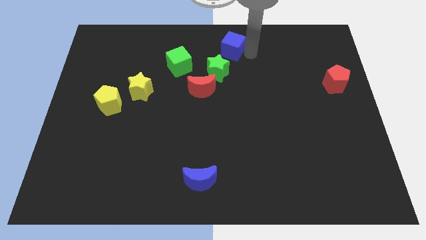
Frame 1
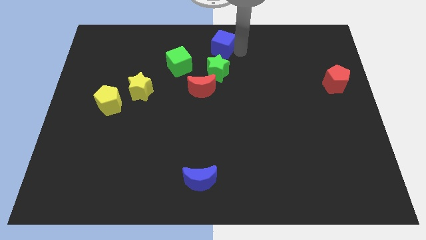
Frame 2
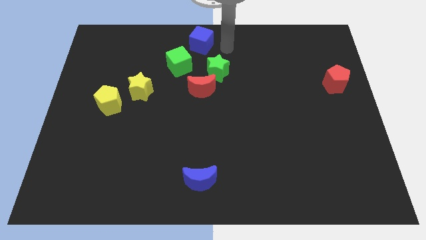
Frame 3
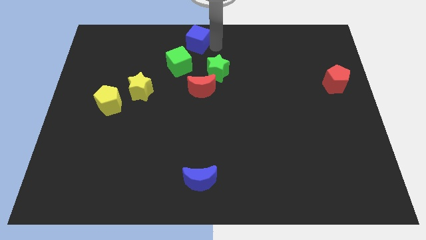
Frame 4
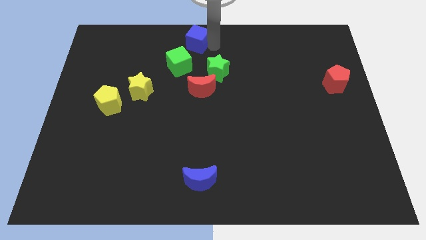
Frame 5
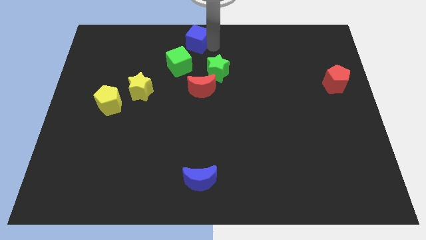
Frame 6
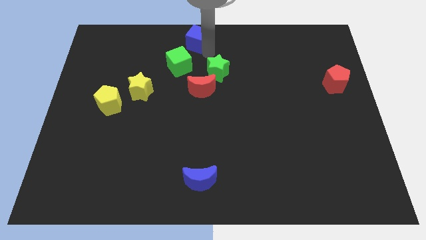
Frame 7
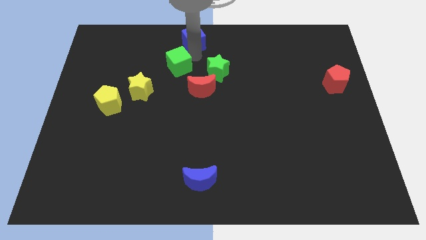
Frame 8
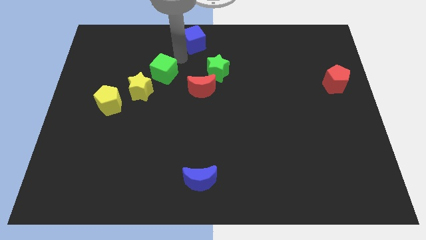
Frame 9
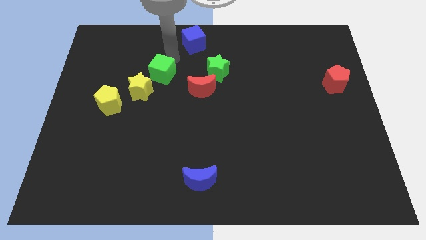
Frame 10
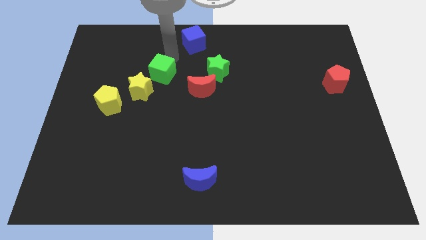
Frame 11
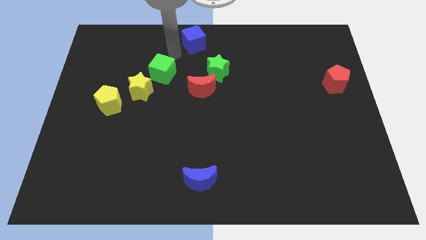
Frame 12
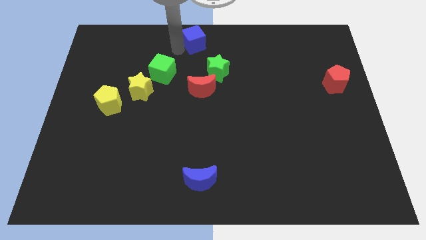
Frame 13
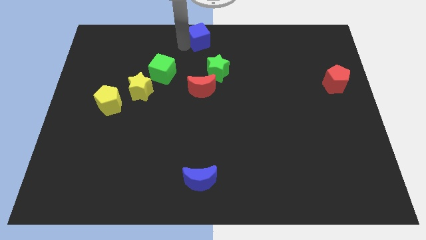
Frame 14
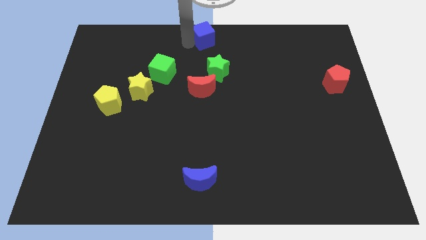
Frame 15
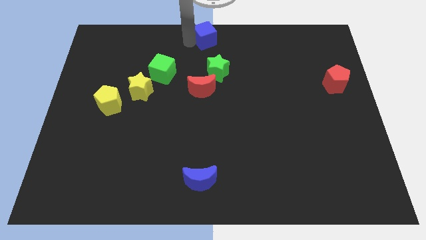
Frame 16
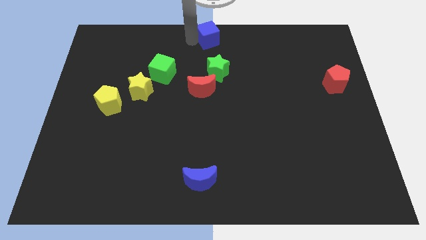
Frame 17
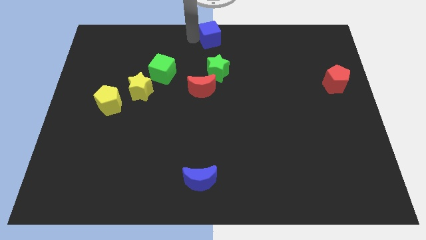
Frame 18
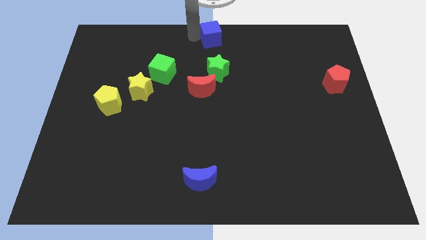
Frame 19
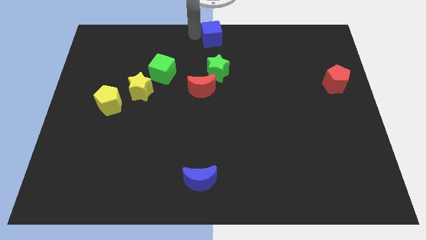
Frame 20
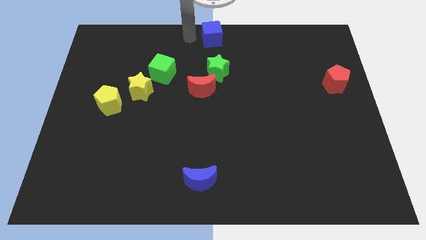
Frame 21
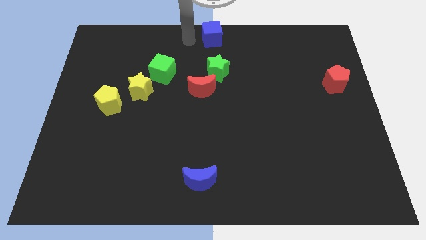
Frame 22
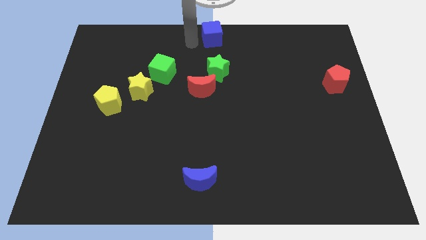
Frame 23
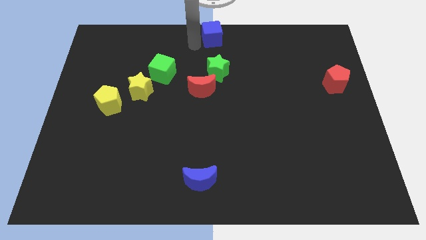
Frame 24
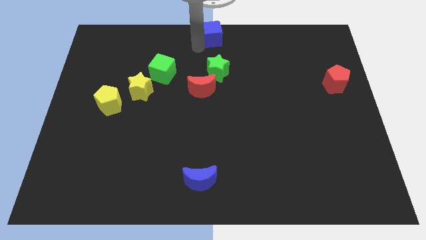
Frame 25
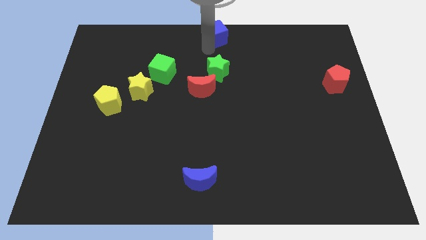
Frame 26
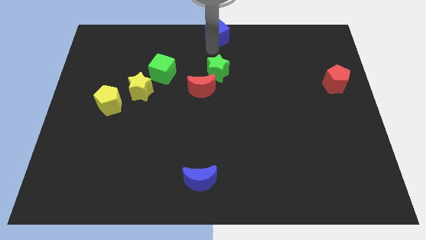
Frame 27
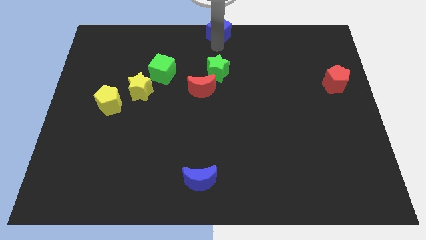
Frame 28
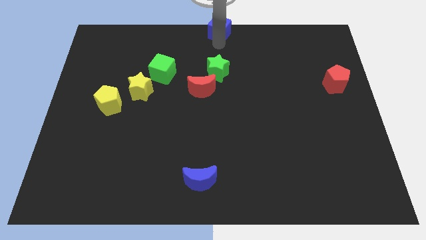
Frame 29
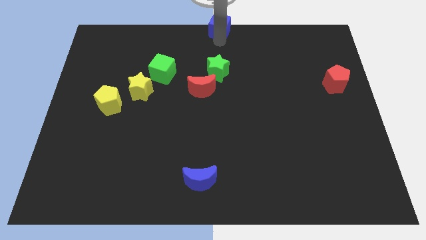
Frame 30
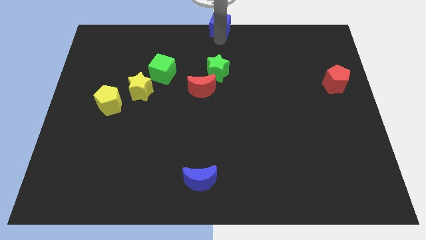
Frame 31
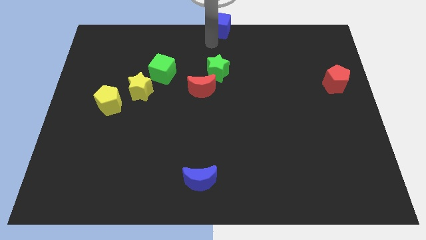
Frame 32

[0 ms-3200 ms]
put the blue cube and the green cube diagonal to each other

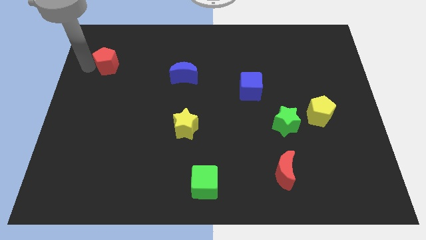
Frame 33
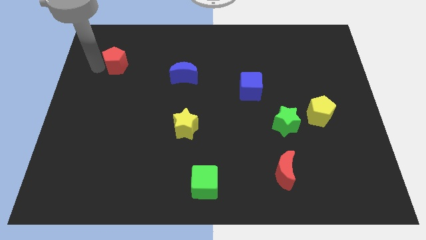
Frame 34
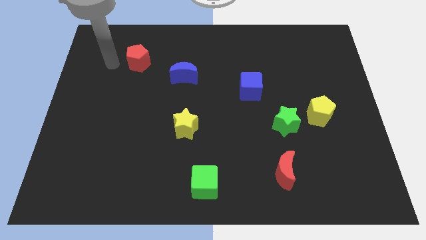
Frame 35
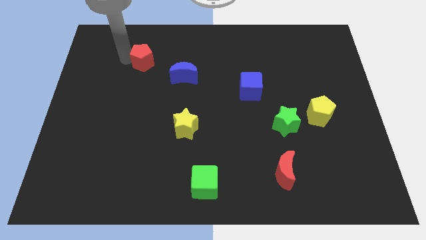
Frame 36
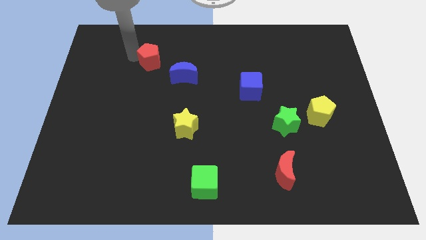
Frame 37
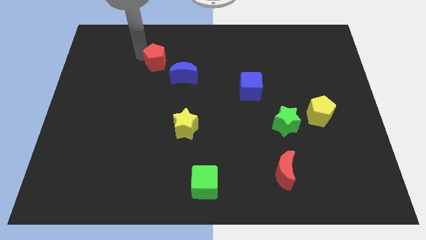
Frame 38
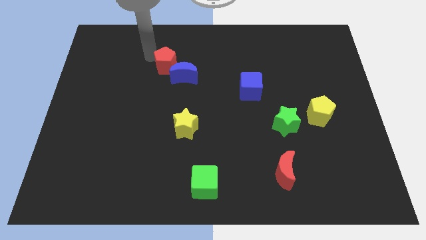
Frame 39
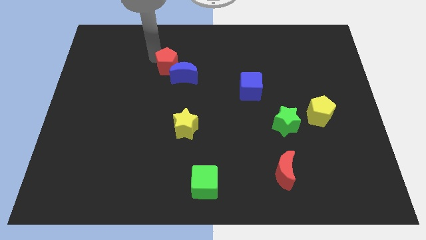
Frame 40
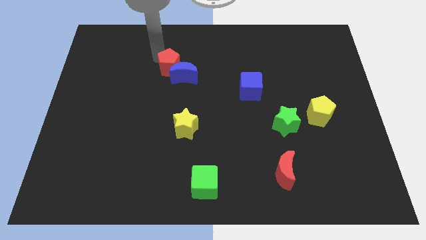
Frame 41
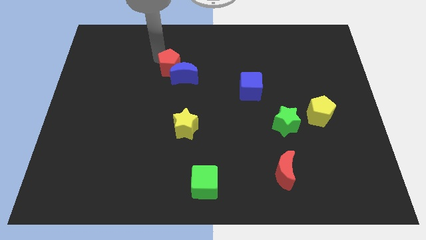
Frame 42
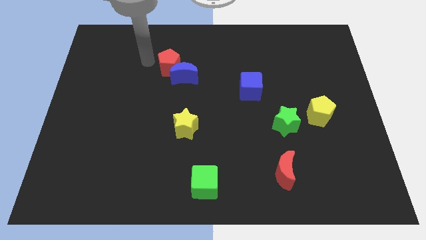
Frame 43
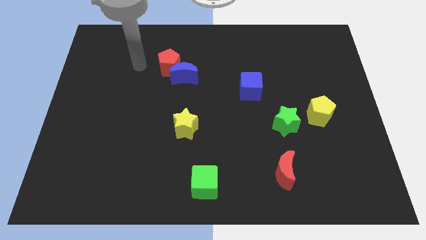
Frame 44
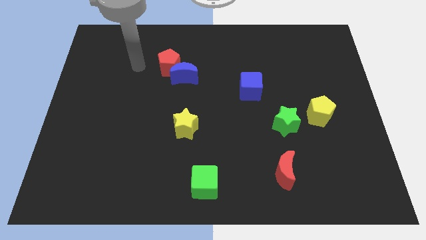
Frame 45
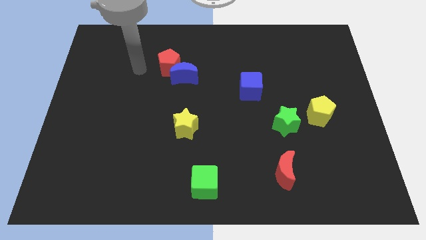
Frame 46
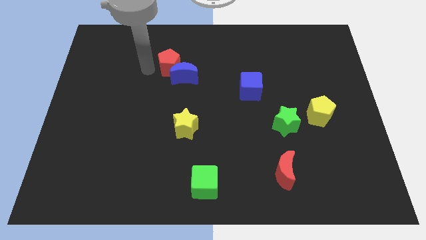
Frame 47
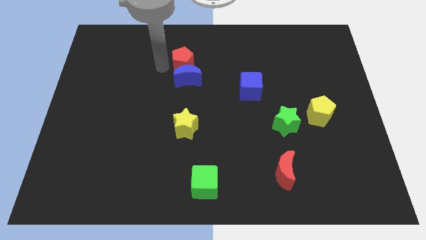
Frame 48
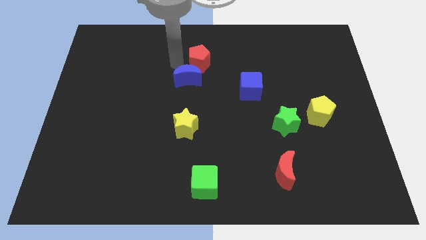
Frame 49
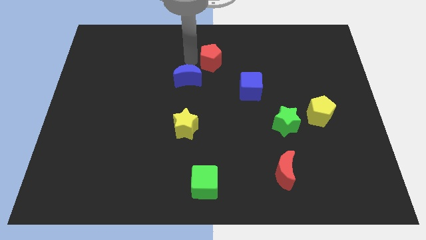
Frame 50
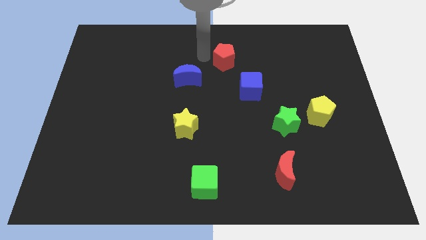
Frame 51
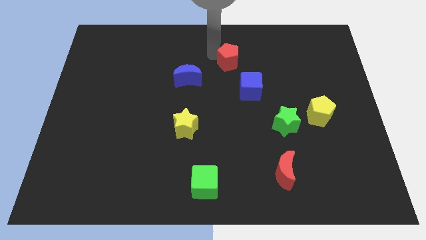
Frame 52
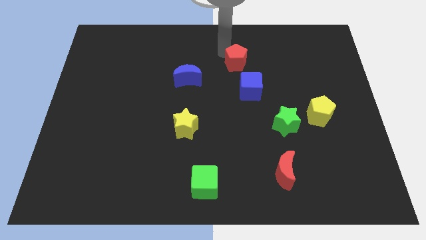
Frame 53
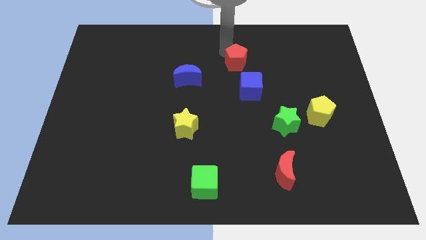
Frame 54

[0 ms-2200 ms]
move the red pentagon close to blue moon

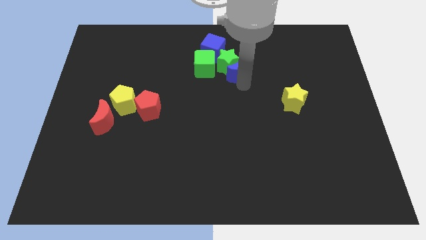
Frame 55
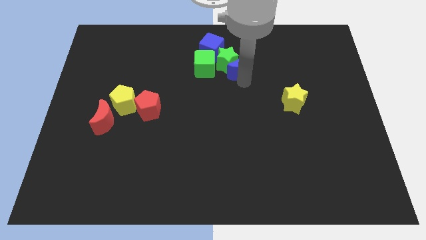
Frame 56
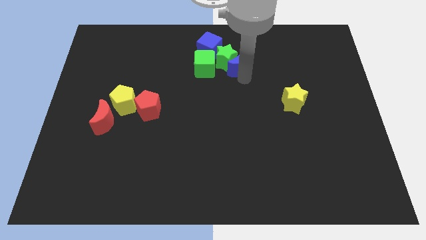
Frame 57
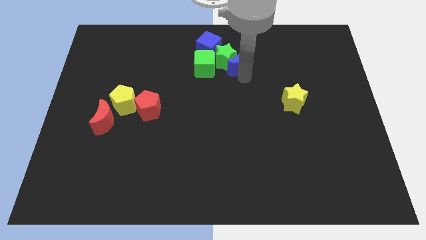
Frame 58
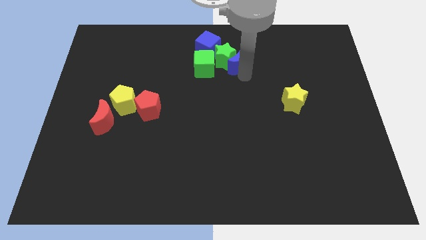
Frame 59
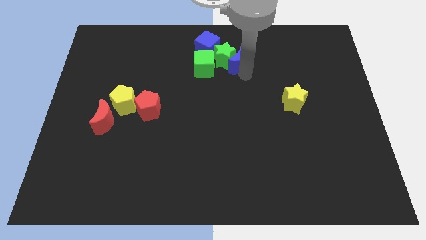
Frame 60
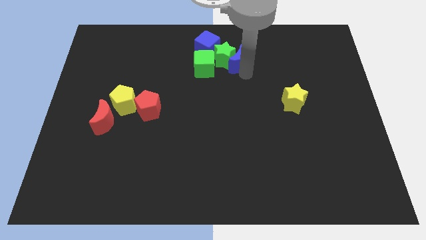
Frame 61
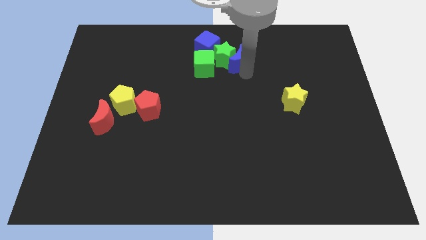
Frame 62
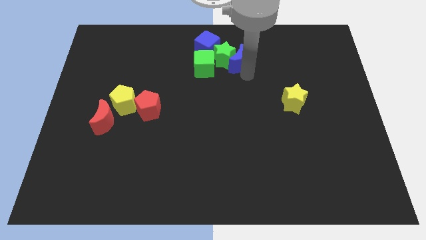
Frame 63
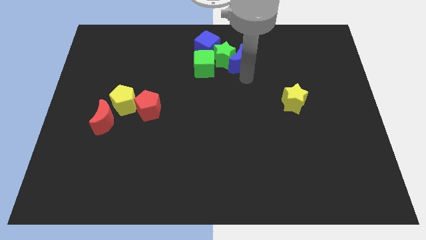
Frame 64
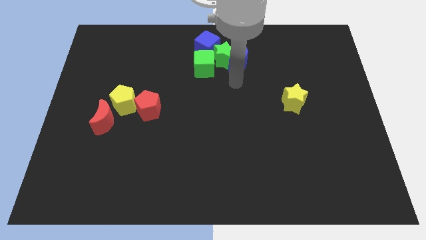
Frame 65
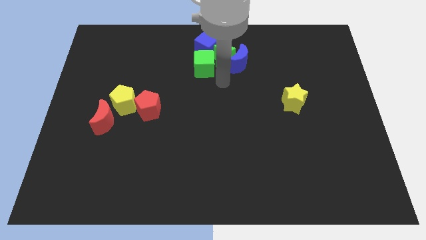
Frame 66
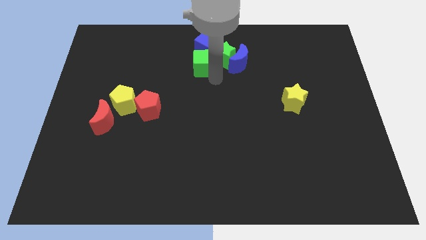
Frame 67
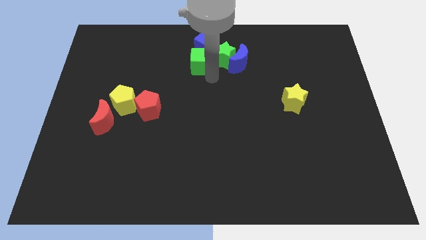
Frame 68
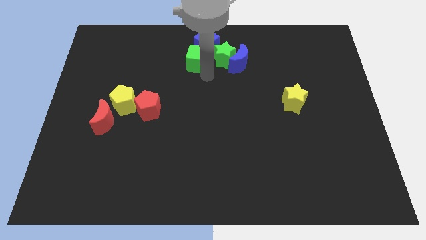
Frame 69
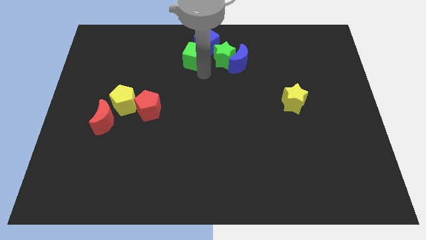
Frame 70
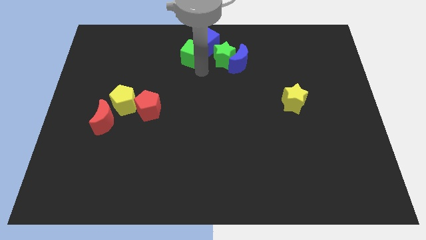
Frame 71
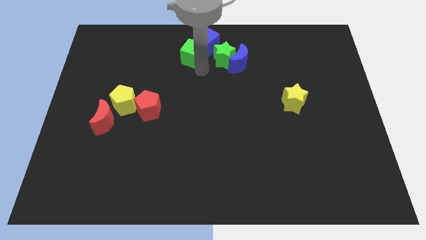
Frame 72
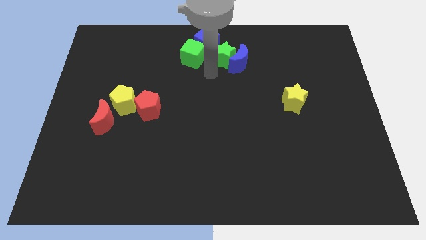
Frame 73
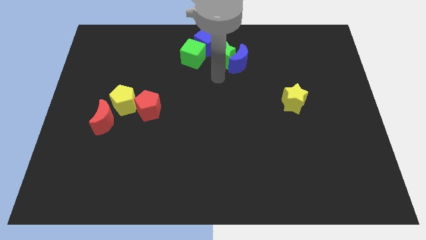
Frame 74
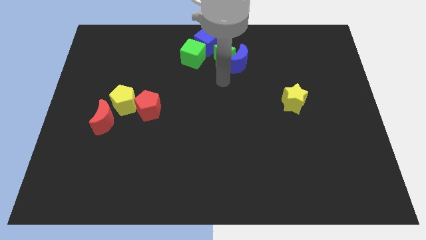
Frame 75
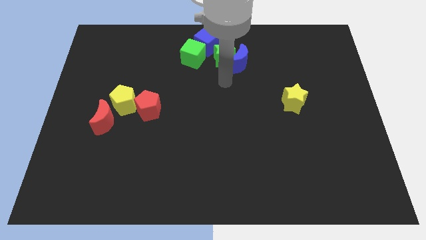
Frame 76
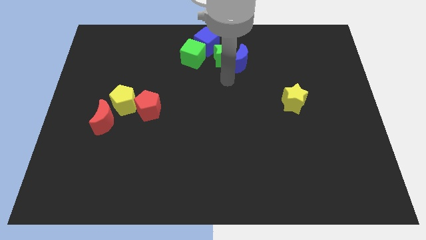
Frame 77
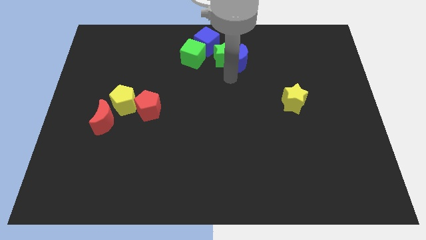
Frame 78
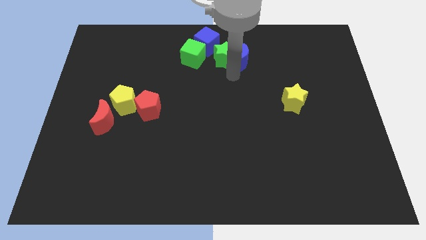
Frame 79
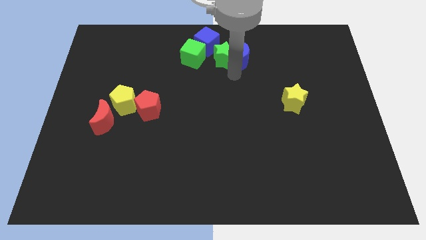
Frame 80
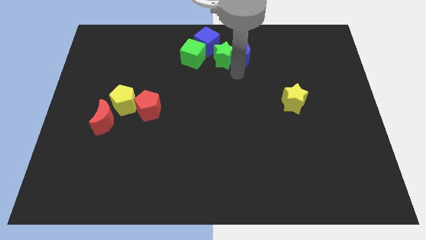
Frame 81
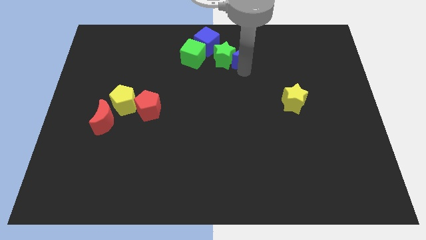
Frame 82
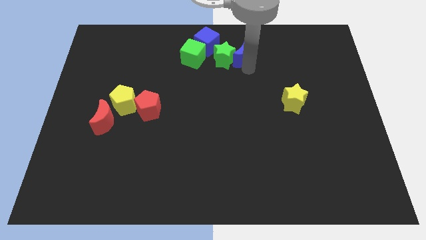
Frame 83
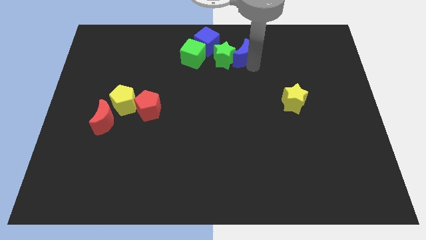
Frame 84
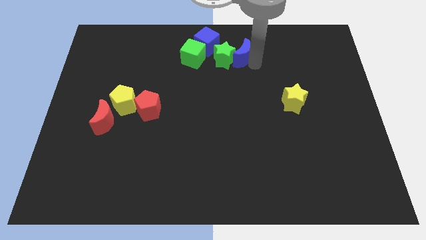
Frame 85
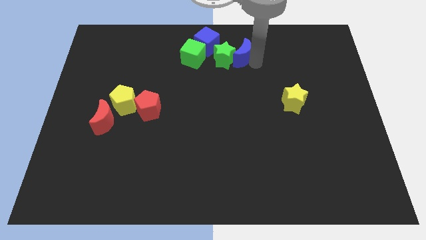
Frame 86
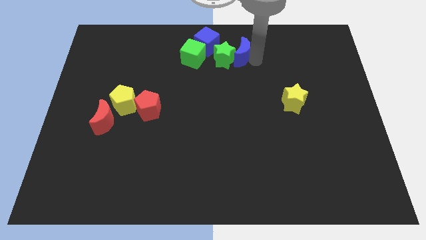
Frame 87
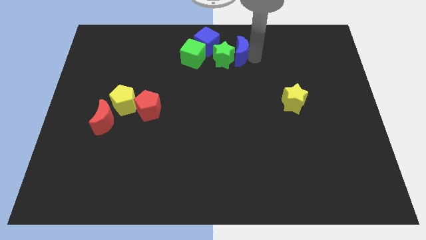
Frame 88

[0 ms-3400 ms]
push the blue crescent into the green star from the right

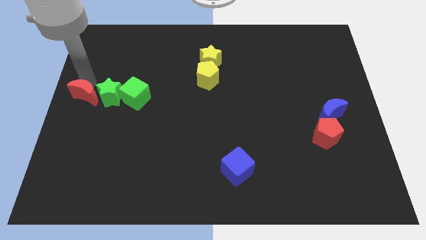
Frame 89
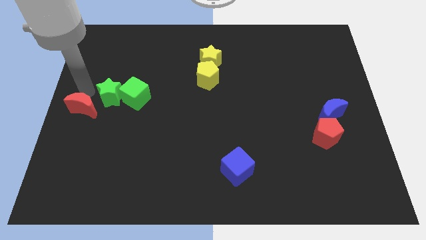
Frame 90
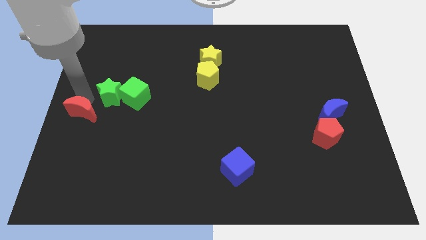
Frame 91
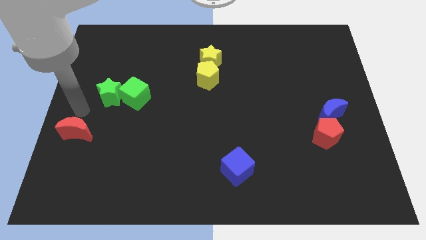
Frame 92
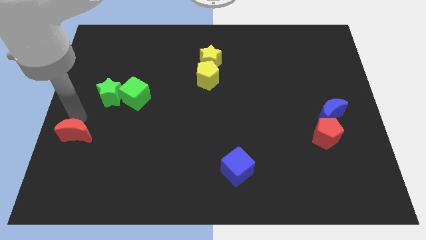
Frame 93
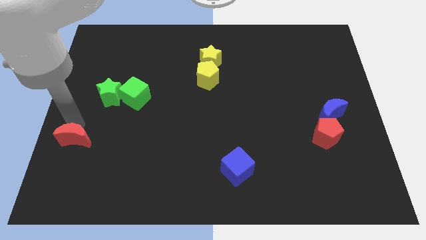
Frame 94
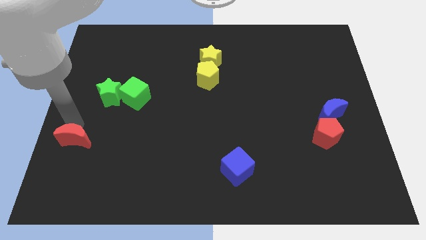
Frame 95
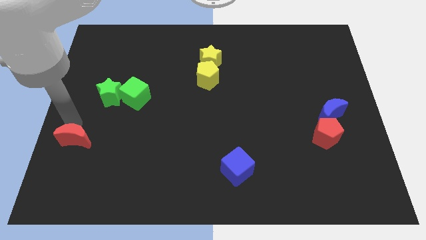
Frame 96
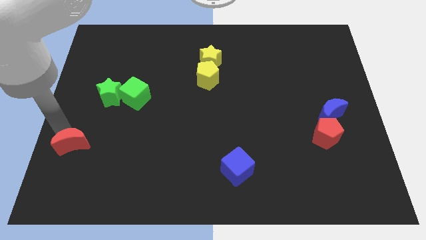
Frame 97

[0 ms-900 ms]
push the red moon slightly towards the bottom
